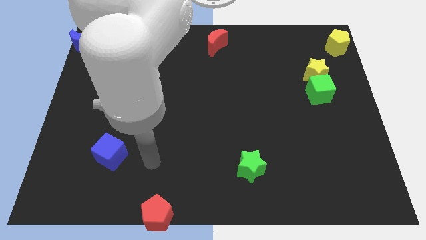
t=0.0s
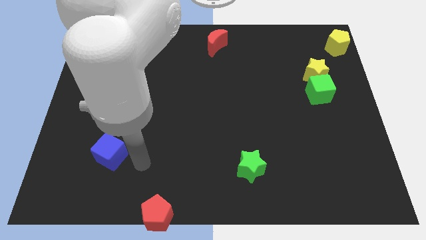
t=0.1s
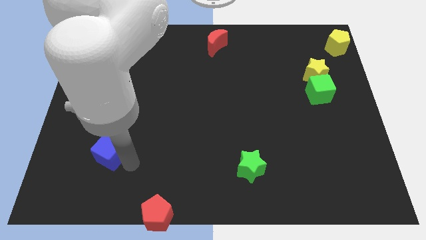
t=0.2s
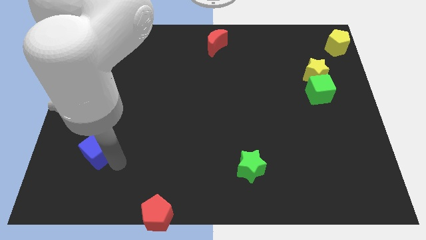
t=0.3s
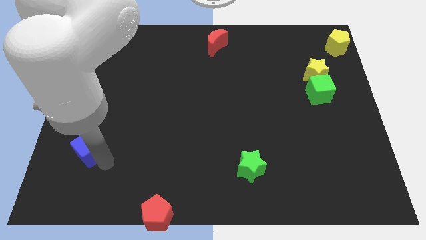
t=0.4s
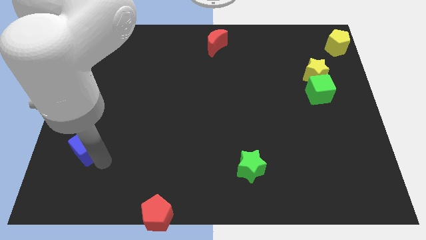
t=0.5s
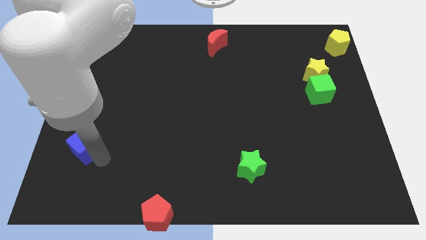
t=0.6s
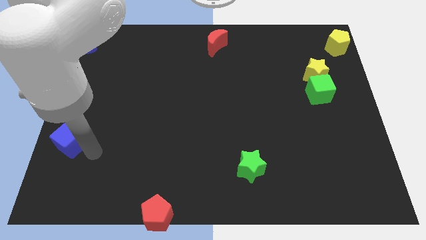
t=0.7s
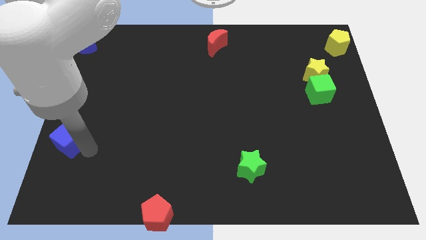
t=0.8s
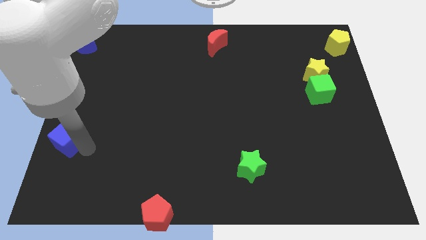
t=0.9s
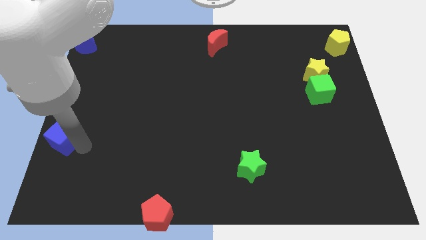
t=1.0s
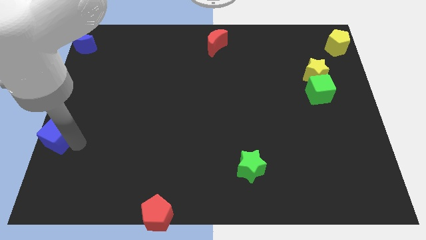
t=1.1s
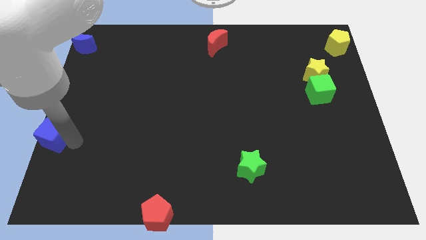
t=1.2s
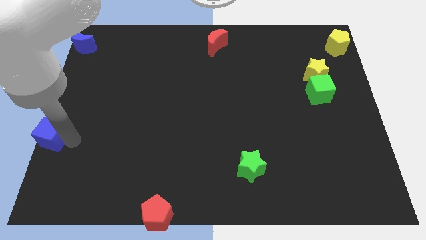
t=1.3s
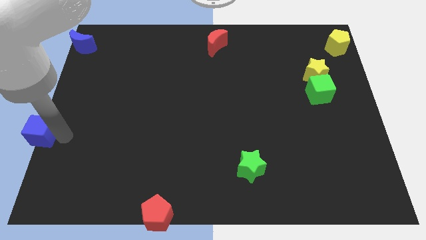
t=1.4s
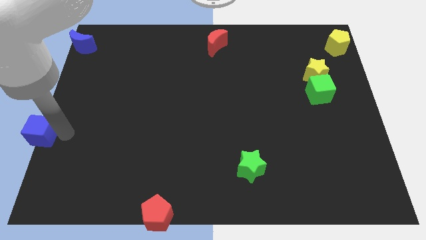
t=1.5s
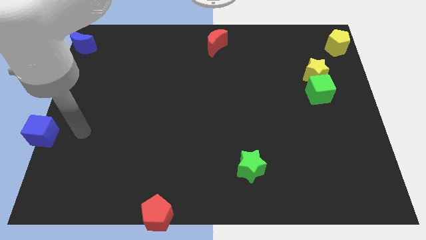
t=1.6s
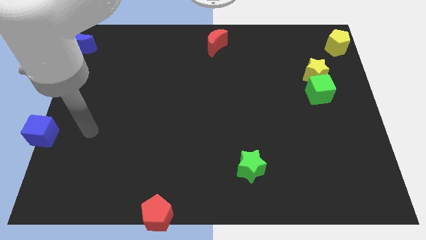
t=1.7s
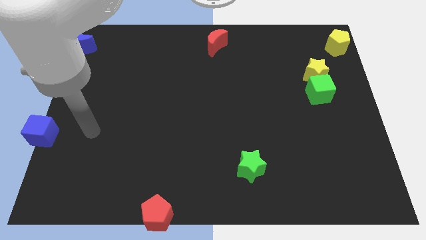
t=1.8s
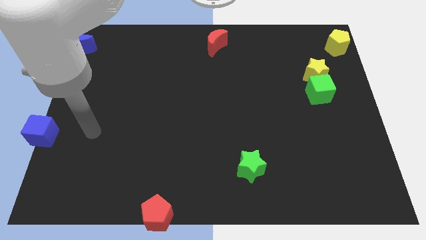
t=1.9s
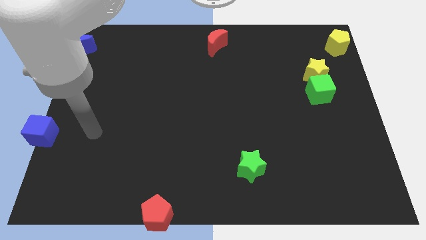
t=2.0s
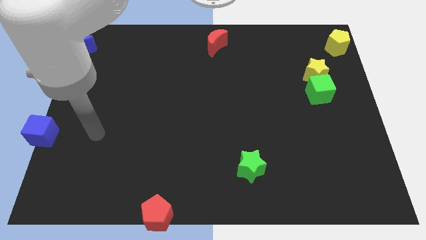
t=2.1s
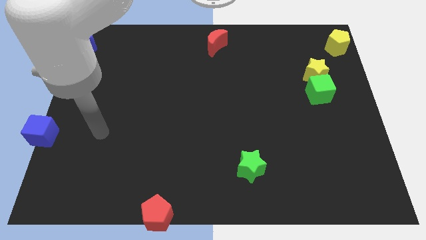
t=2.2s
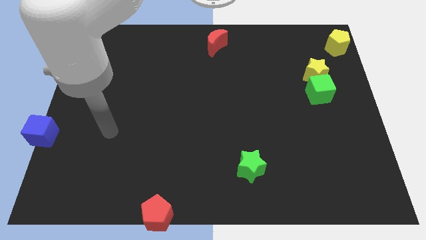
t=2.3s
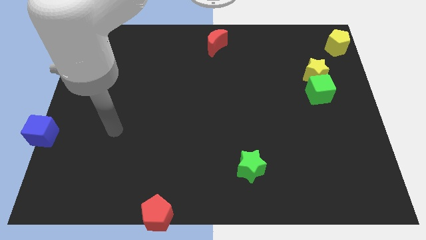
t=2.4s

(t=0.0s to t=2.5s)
push the blue cube at the bottom center of the board

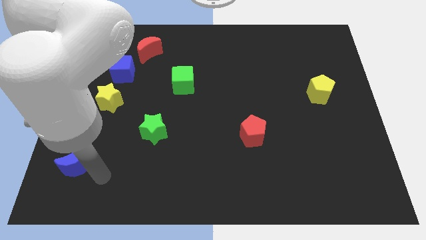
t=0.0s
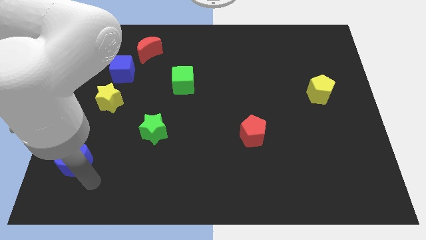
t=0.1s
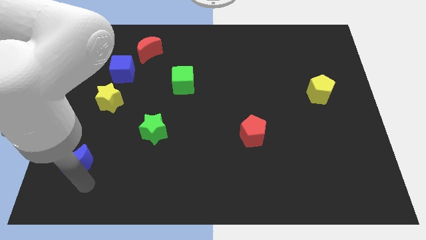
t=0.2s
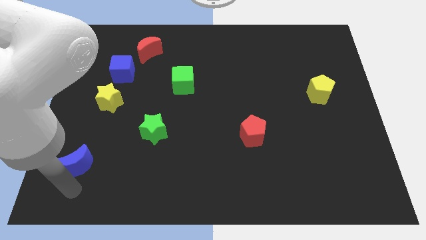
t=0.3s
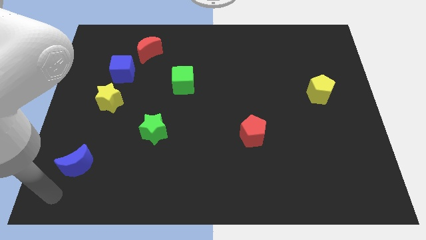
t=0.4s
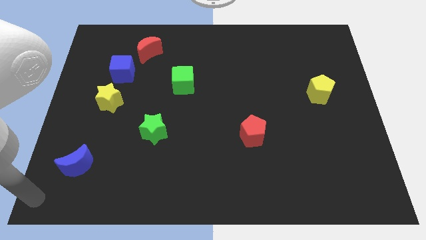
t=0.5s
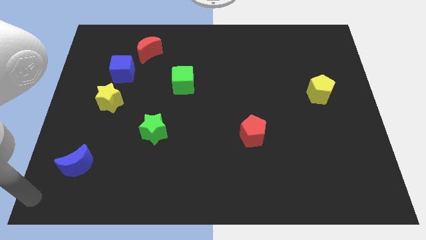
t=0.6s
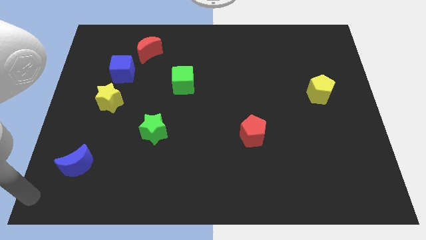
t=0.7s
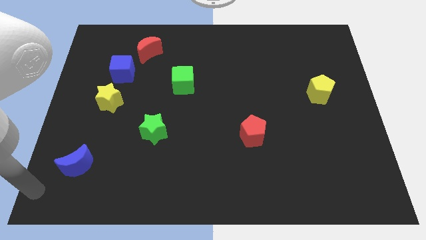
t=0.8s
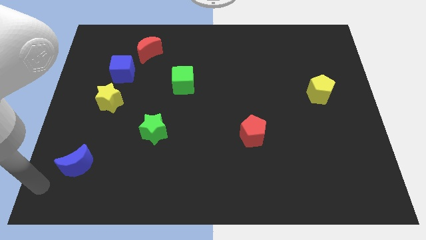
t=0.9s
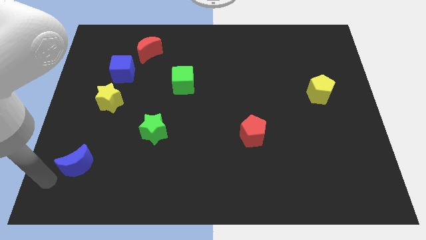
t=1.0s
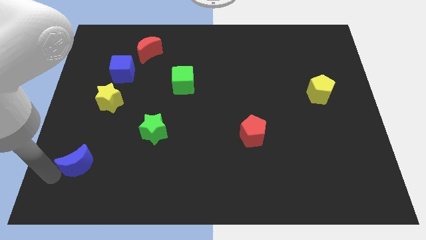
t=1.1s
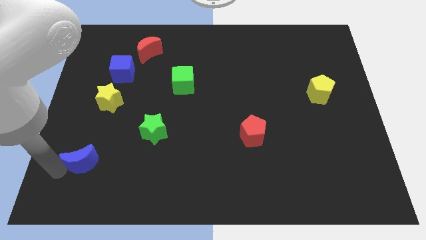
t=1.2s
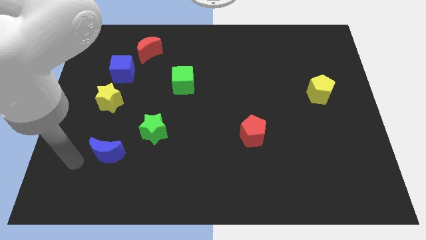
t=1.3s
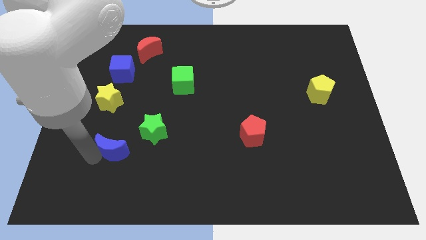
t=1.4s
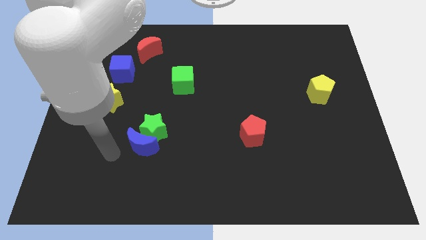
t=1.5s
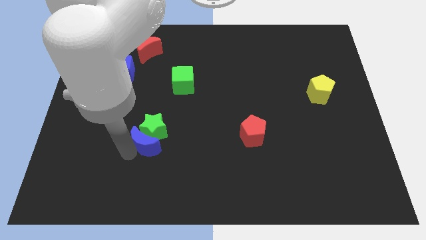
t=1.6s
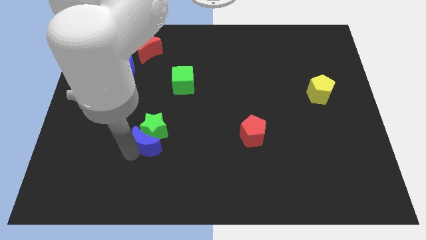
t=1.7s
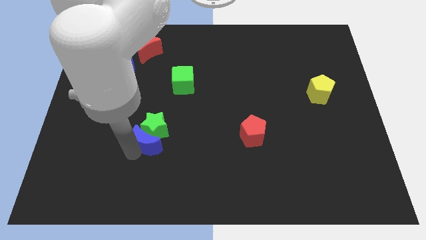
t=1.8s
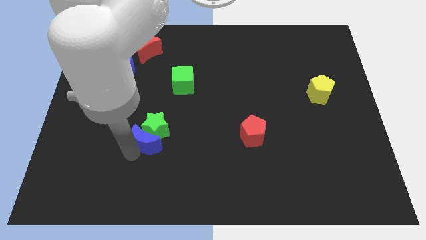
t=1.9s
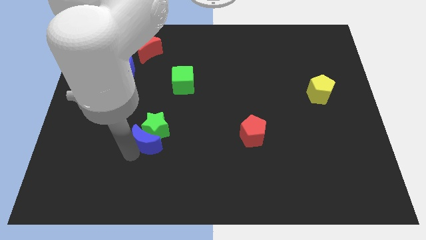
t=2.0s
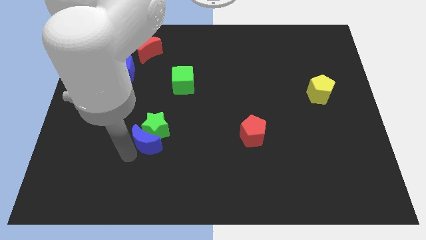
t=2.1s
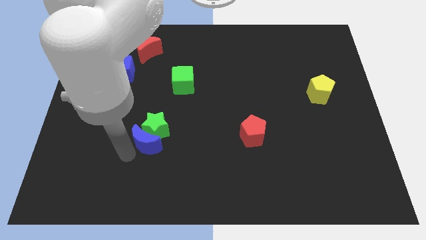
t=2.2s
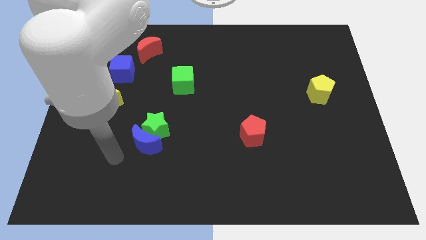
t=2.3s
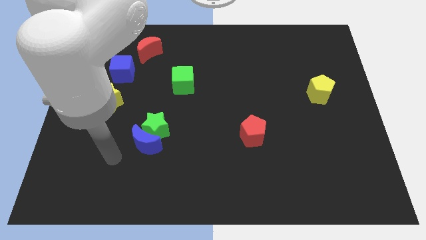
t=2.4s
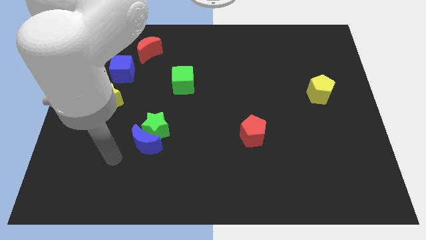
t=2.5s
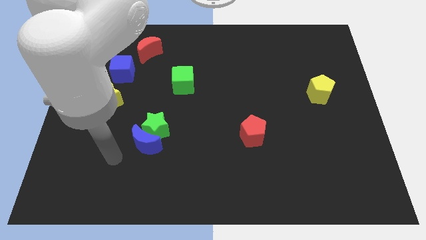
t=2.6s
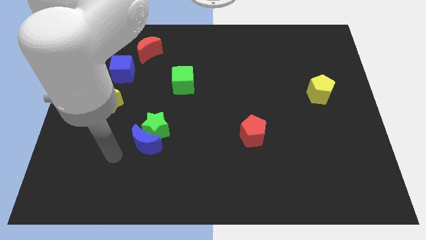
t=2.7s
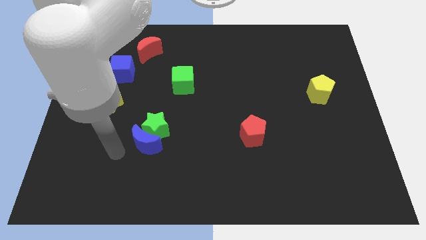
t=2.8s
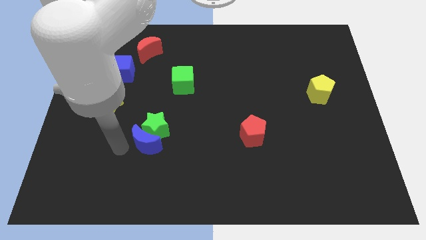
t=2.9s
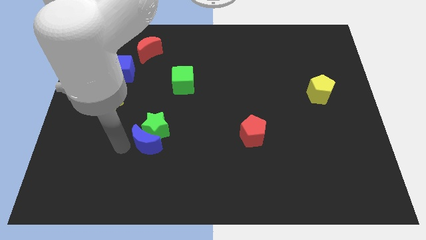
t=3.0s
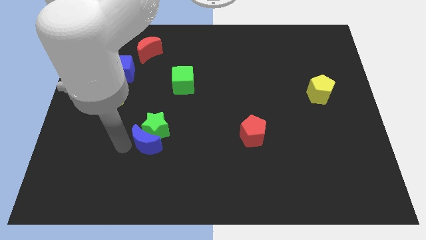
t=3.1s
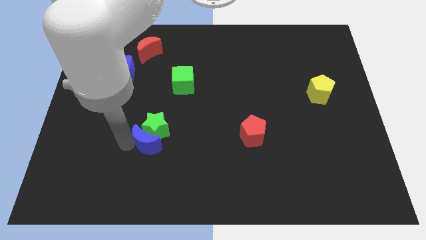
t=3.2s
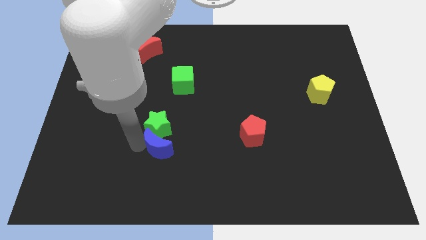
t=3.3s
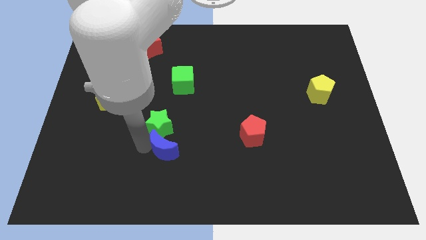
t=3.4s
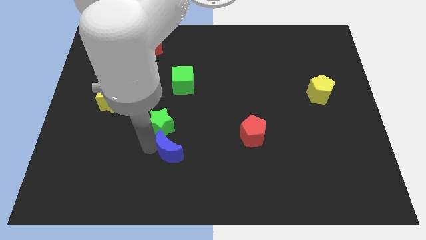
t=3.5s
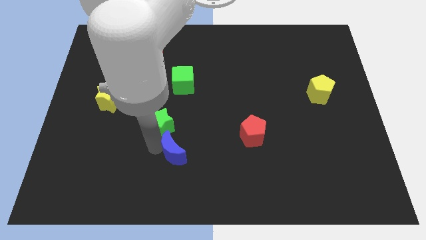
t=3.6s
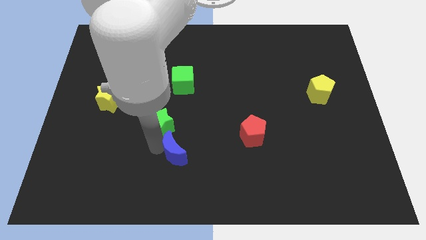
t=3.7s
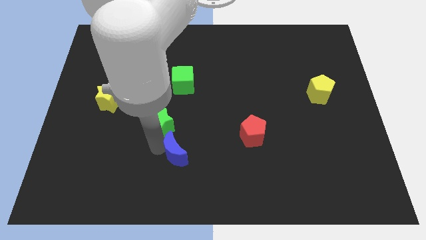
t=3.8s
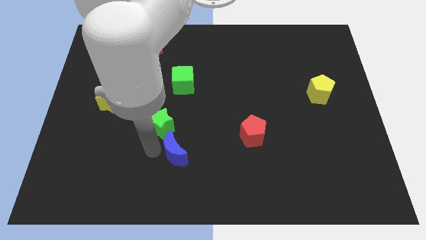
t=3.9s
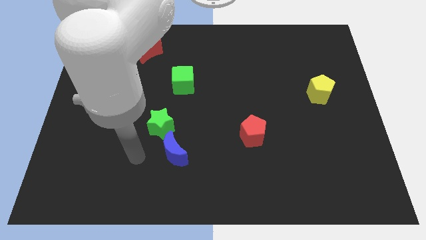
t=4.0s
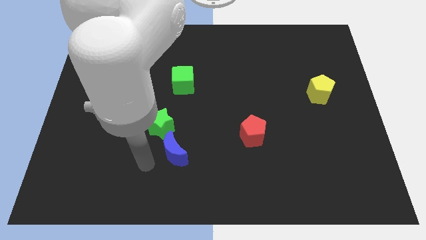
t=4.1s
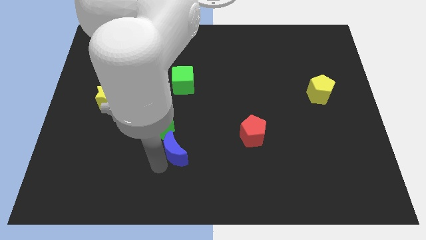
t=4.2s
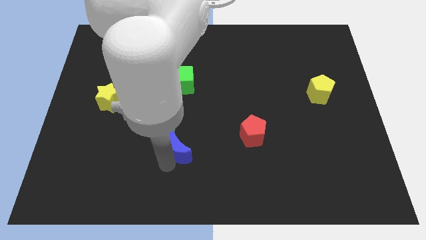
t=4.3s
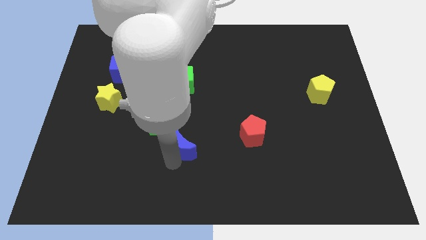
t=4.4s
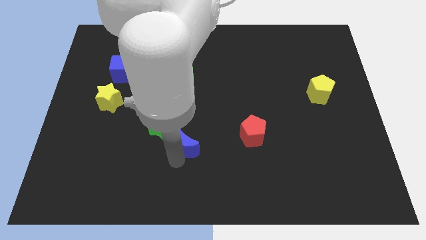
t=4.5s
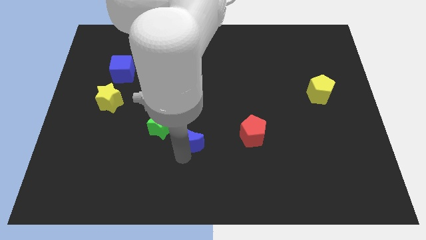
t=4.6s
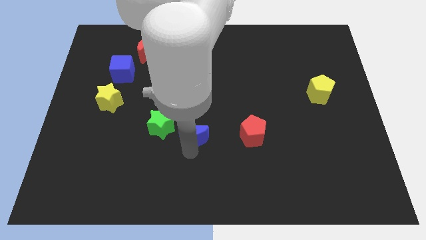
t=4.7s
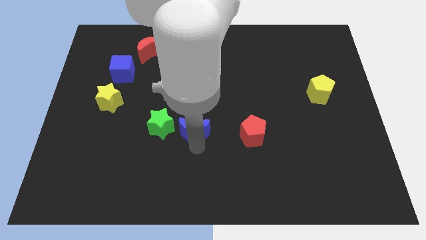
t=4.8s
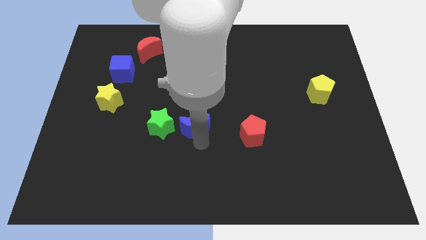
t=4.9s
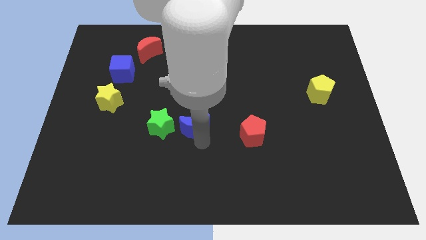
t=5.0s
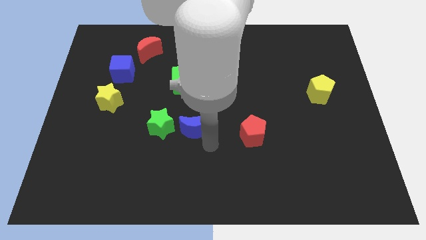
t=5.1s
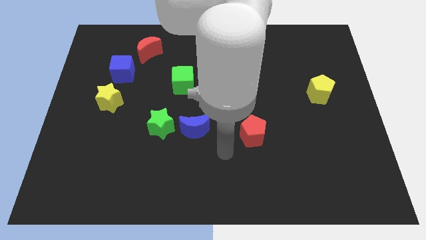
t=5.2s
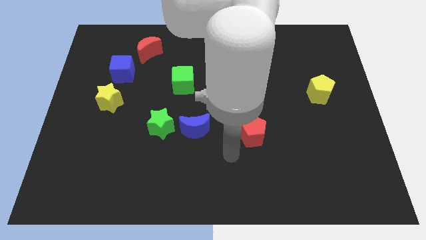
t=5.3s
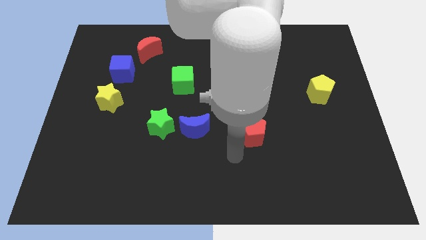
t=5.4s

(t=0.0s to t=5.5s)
put the blue moon in between red pentagon and green star

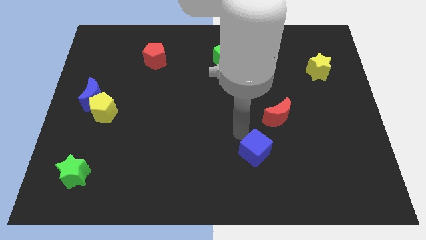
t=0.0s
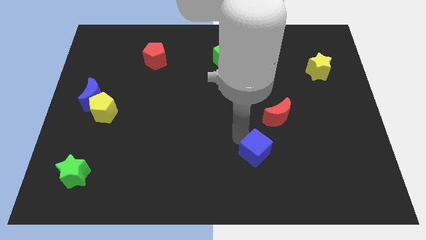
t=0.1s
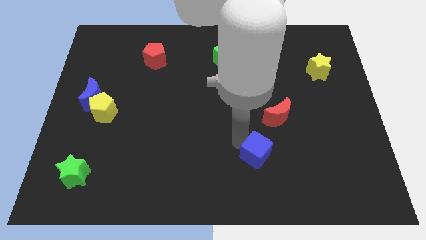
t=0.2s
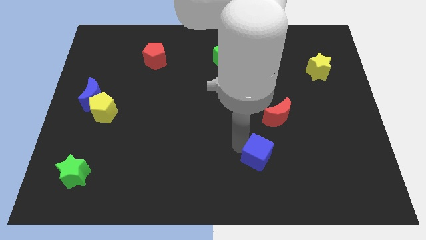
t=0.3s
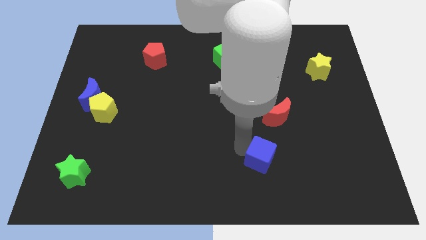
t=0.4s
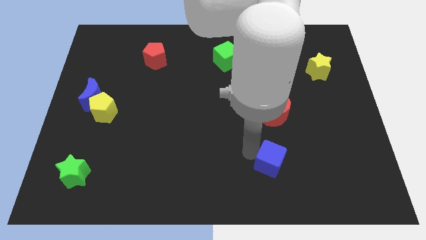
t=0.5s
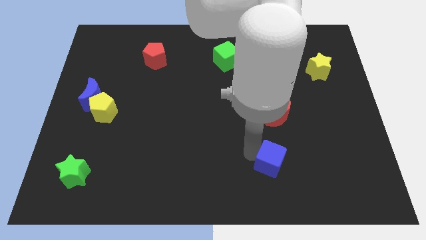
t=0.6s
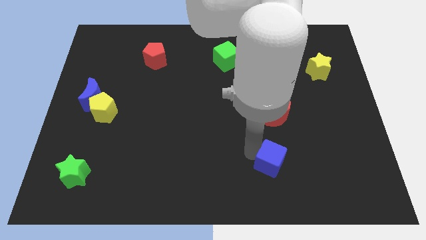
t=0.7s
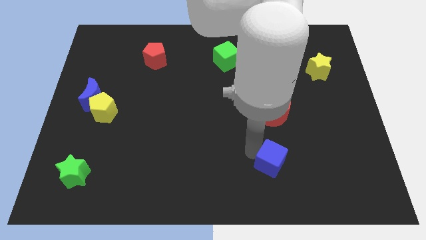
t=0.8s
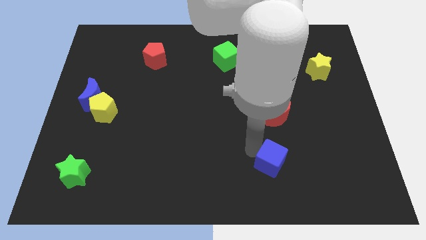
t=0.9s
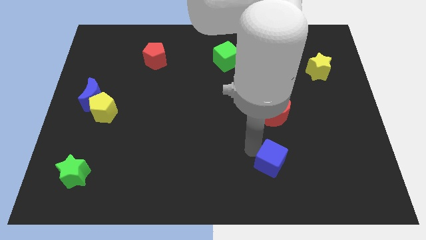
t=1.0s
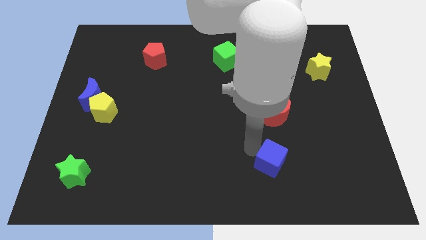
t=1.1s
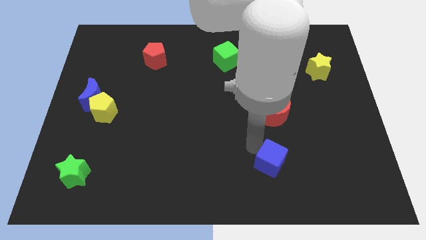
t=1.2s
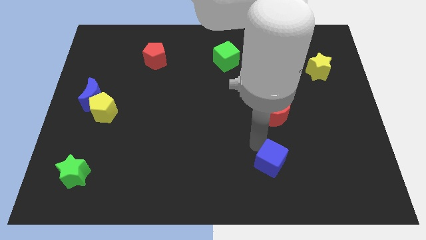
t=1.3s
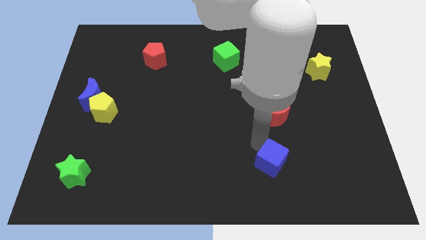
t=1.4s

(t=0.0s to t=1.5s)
put blue cube below red moon
